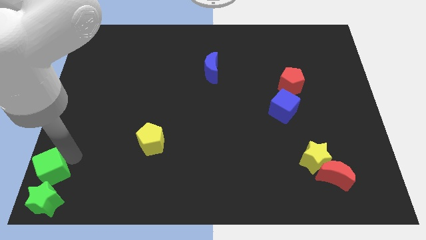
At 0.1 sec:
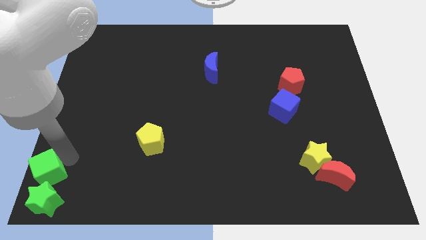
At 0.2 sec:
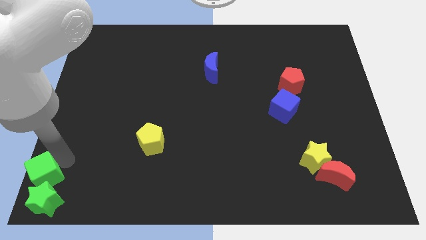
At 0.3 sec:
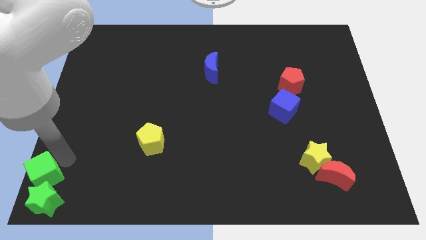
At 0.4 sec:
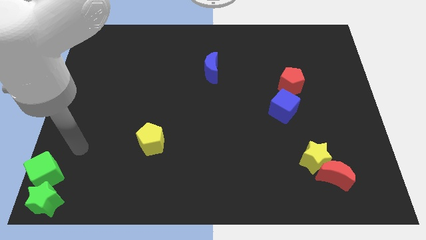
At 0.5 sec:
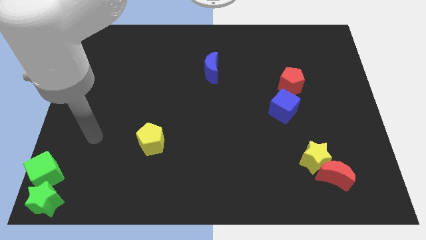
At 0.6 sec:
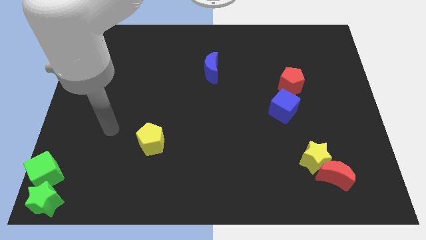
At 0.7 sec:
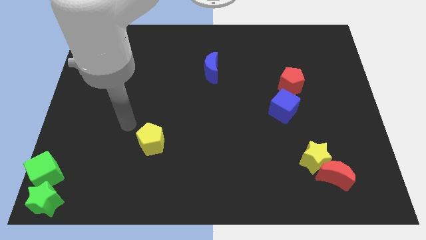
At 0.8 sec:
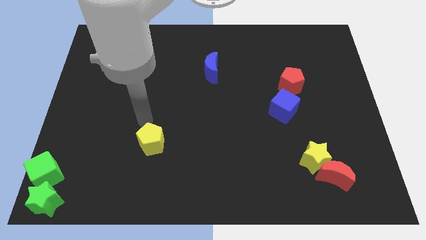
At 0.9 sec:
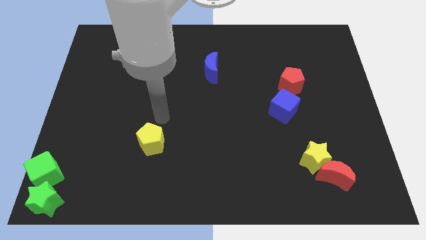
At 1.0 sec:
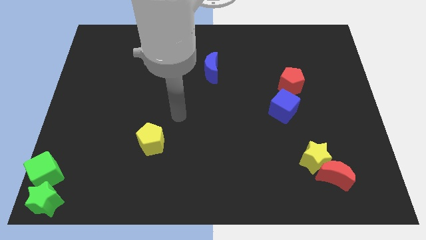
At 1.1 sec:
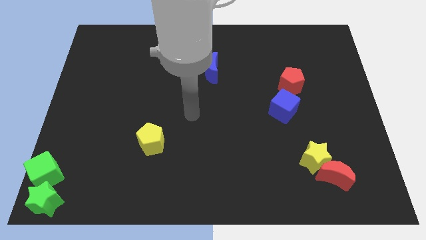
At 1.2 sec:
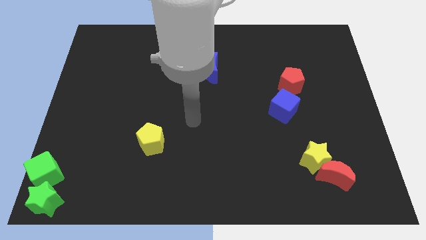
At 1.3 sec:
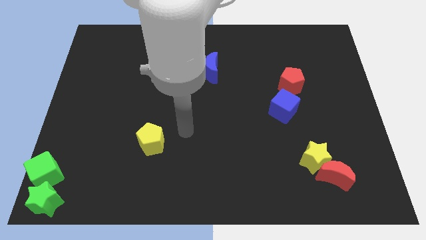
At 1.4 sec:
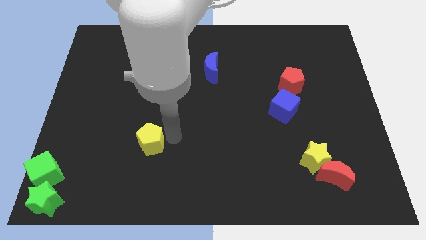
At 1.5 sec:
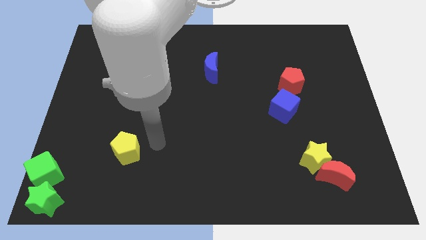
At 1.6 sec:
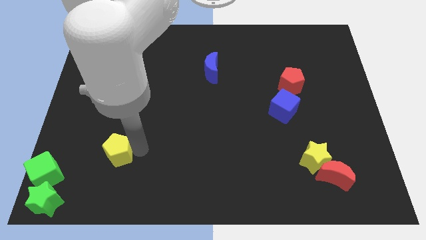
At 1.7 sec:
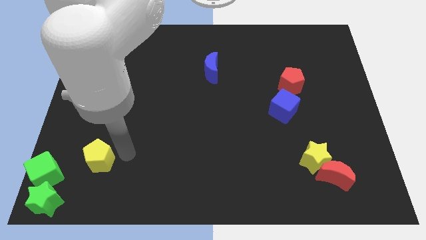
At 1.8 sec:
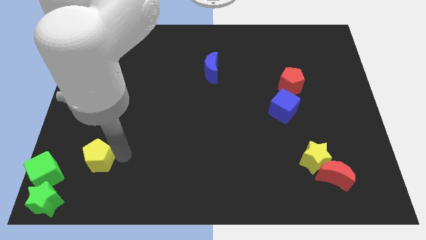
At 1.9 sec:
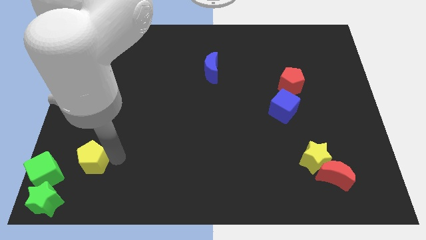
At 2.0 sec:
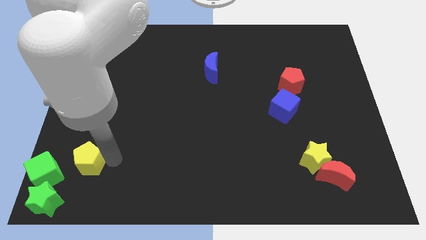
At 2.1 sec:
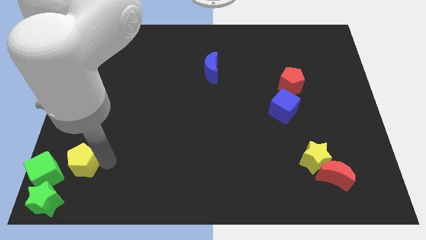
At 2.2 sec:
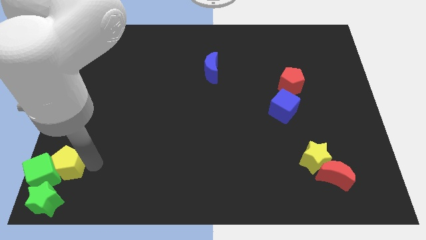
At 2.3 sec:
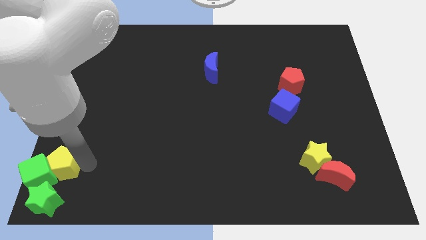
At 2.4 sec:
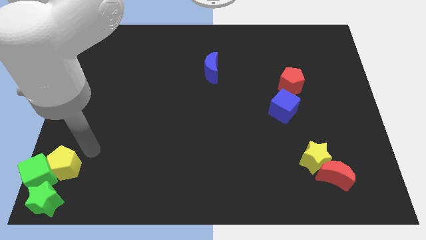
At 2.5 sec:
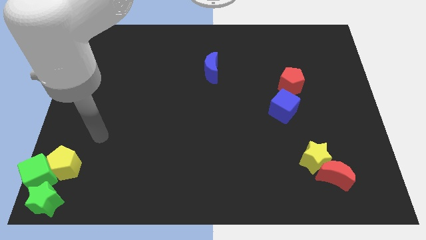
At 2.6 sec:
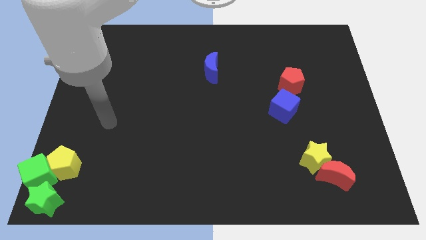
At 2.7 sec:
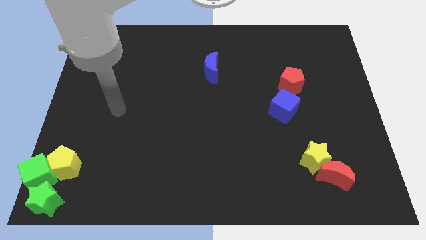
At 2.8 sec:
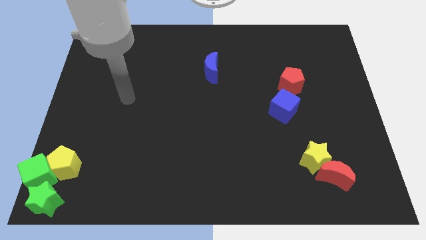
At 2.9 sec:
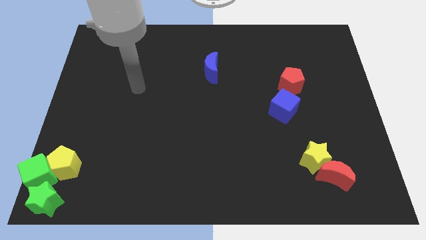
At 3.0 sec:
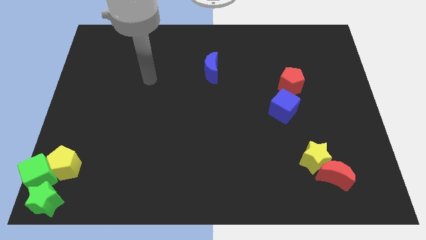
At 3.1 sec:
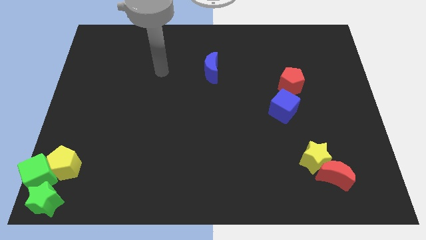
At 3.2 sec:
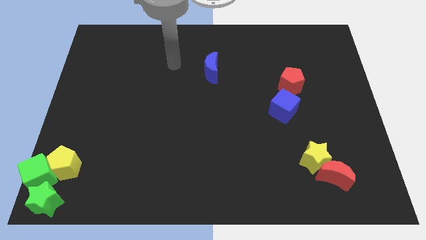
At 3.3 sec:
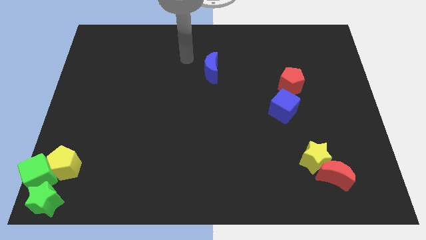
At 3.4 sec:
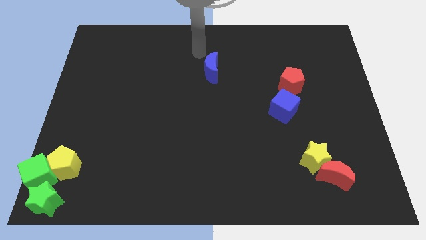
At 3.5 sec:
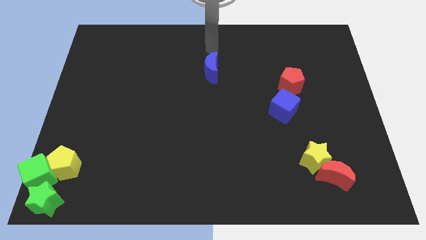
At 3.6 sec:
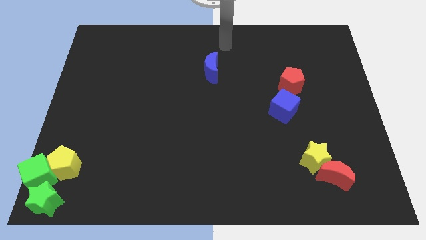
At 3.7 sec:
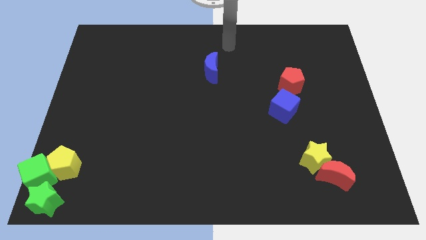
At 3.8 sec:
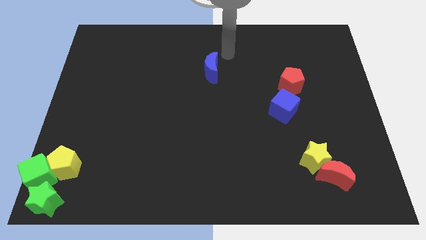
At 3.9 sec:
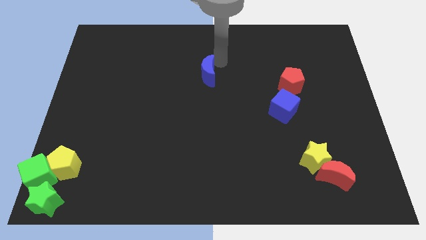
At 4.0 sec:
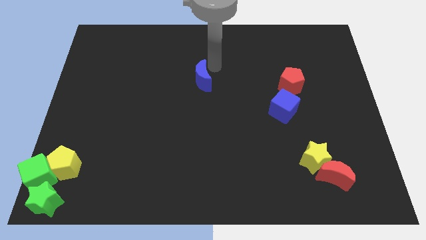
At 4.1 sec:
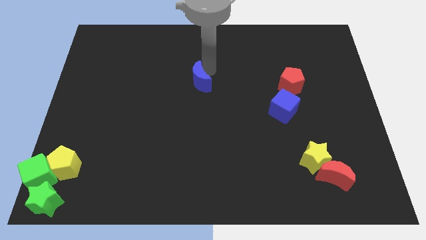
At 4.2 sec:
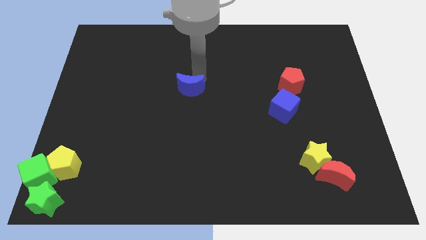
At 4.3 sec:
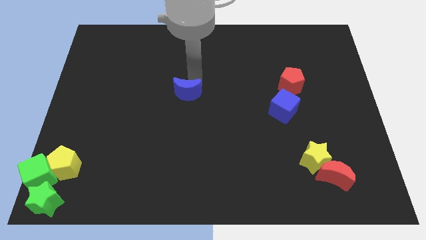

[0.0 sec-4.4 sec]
push the yellow pentagon towards the green cube

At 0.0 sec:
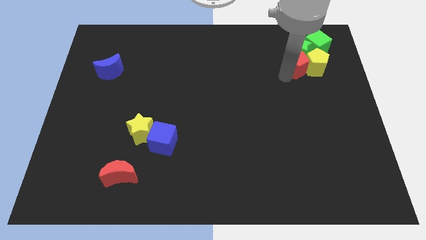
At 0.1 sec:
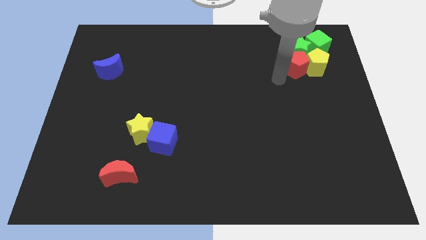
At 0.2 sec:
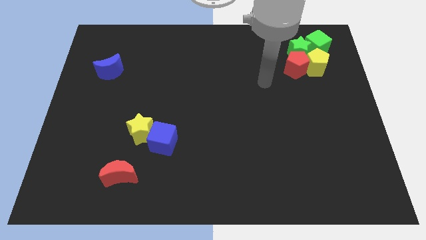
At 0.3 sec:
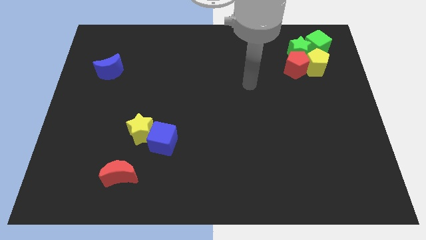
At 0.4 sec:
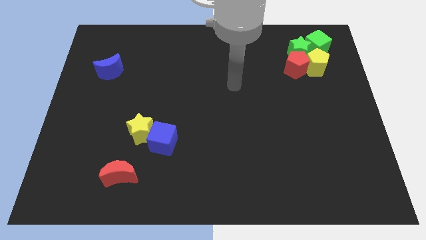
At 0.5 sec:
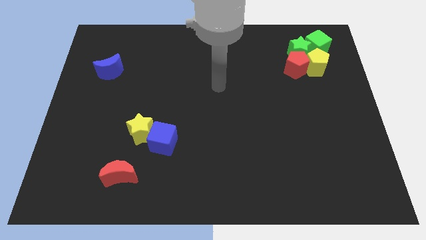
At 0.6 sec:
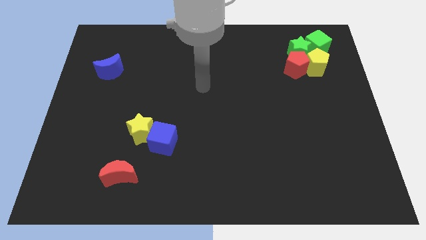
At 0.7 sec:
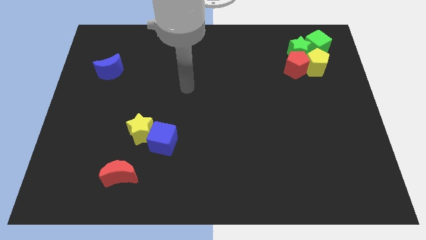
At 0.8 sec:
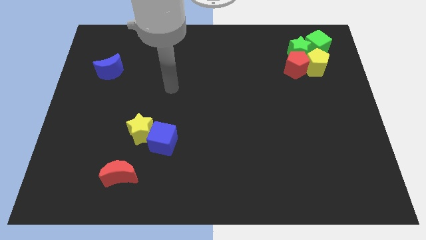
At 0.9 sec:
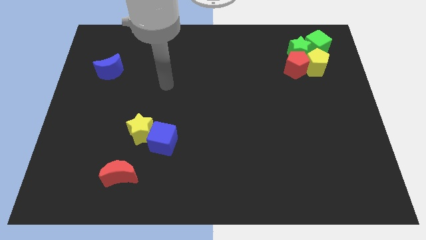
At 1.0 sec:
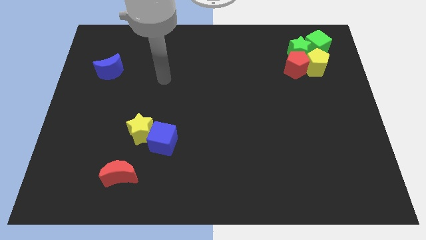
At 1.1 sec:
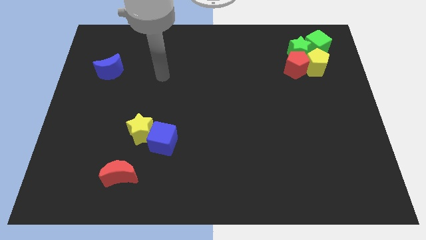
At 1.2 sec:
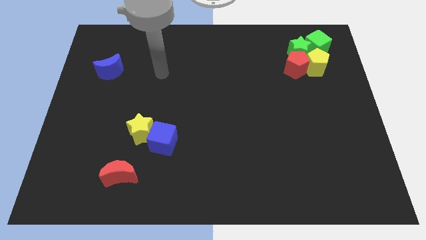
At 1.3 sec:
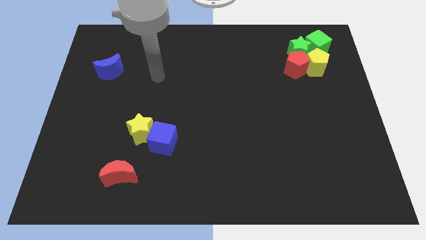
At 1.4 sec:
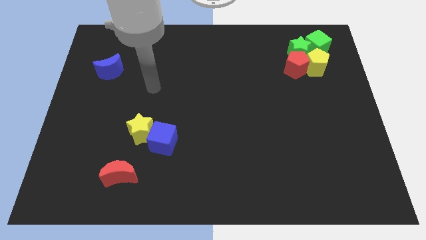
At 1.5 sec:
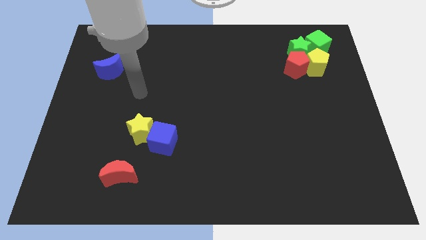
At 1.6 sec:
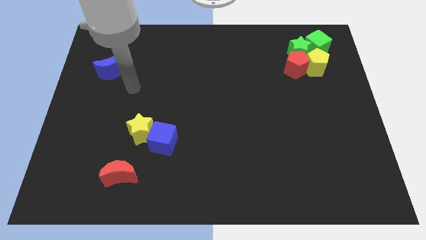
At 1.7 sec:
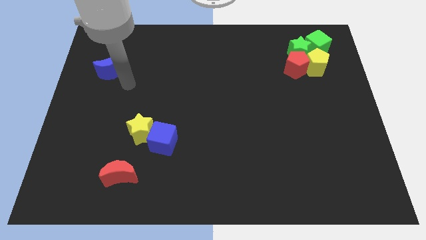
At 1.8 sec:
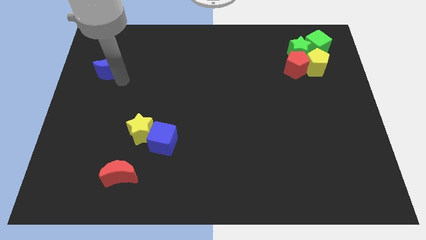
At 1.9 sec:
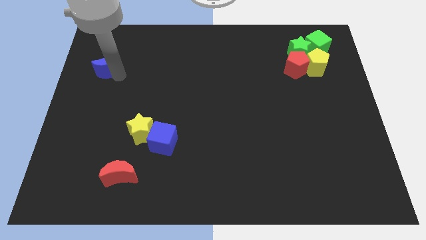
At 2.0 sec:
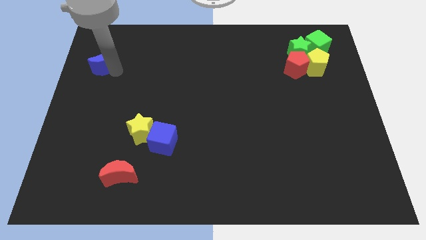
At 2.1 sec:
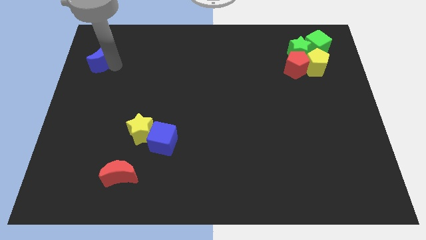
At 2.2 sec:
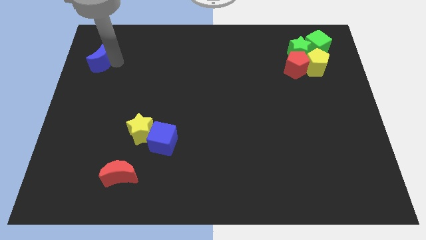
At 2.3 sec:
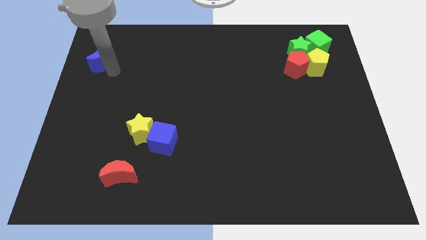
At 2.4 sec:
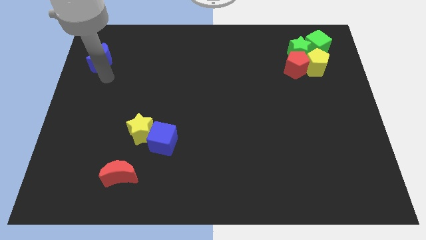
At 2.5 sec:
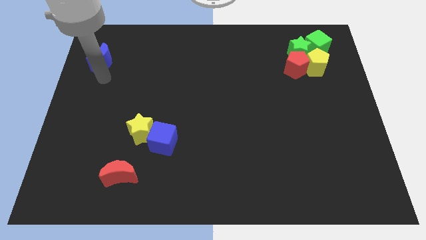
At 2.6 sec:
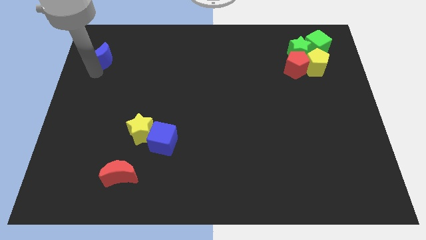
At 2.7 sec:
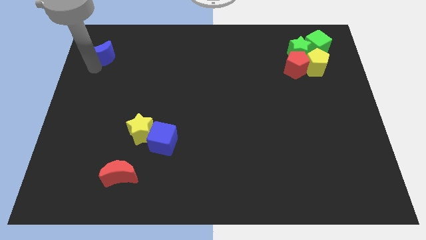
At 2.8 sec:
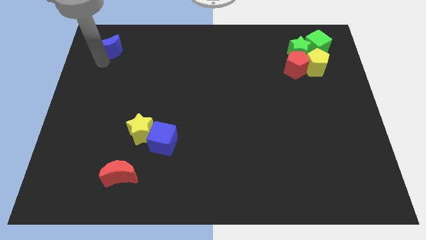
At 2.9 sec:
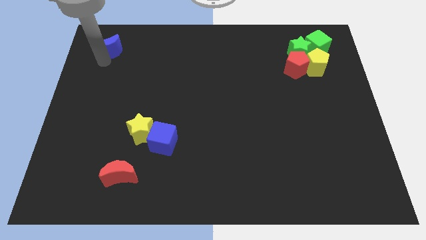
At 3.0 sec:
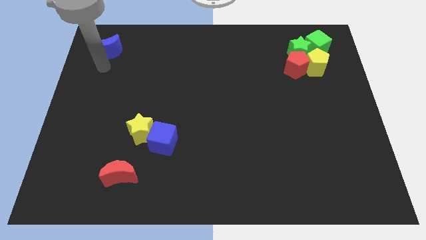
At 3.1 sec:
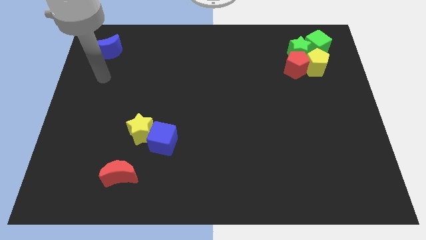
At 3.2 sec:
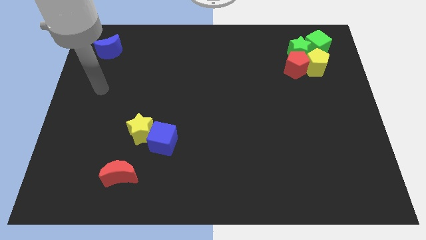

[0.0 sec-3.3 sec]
move the blue moon slightly to the top

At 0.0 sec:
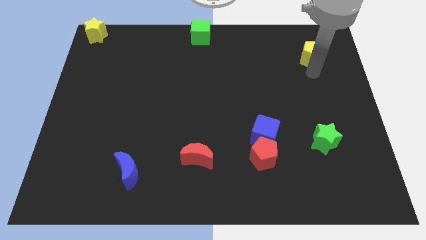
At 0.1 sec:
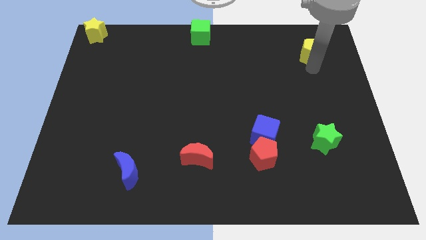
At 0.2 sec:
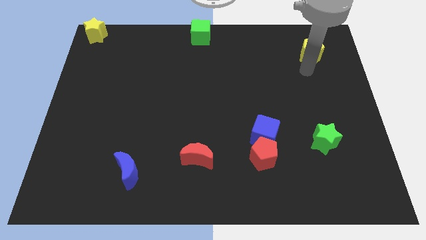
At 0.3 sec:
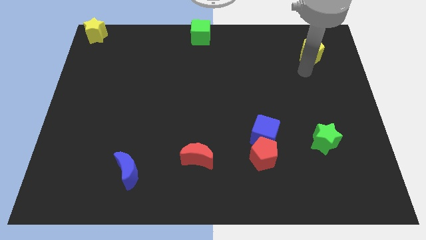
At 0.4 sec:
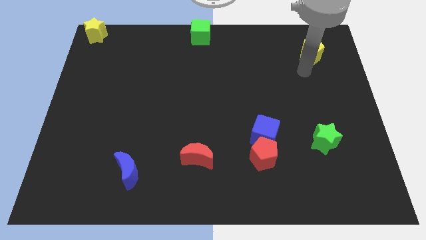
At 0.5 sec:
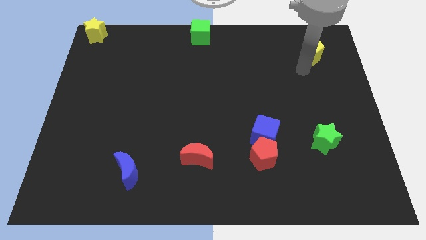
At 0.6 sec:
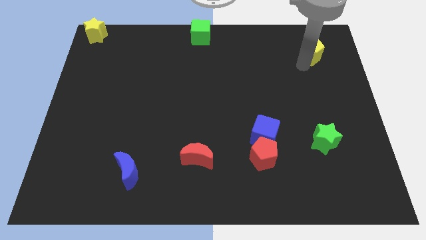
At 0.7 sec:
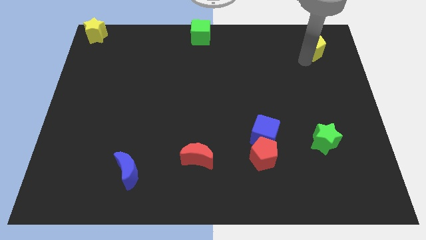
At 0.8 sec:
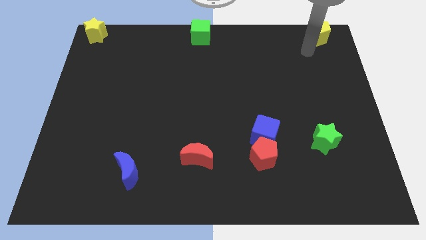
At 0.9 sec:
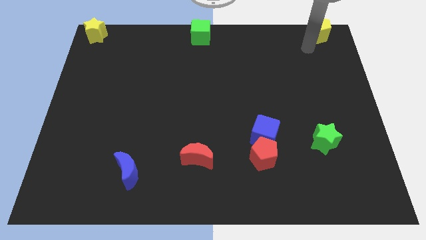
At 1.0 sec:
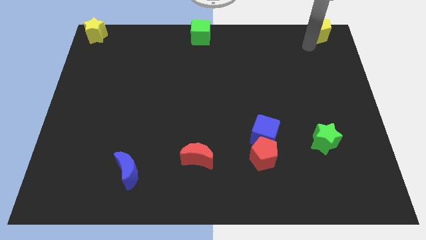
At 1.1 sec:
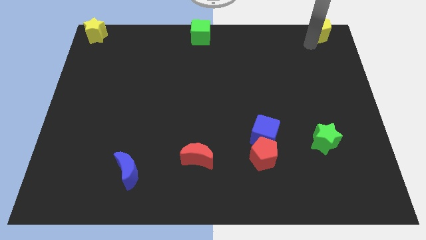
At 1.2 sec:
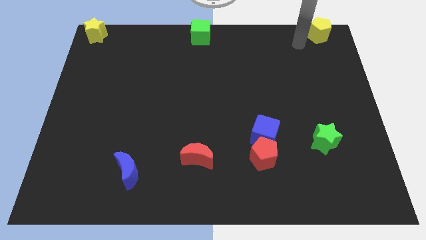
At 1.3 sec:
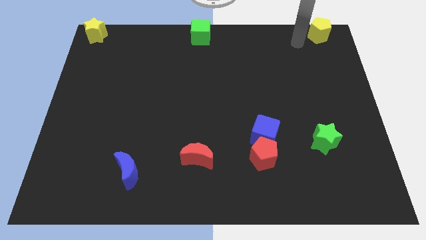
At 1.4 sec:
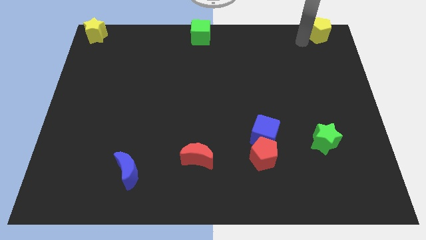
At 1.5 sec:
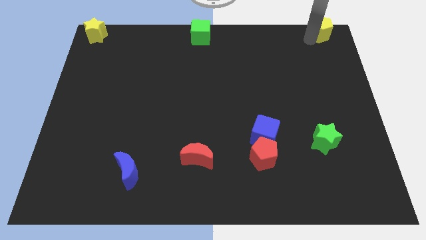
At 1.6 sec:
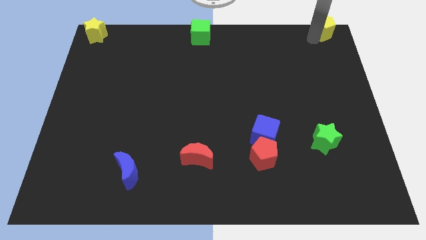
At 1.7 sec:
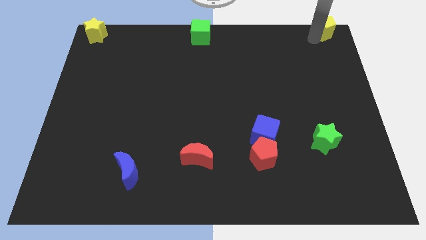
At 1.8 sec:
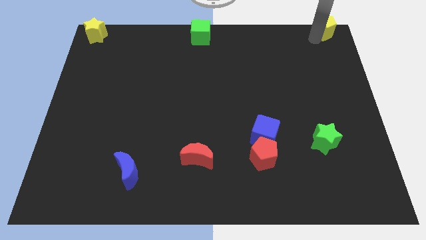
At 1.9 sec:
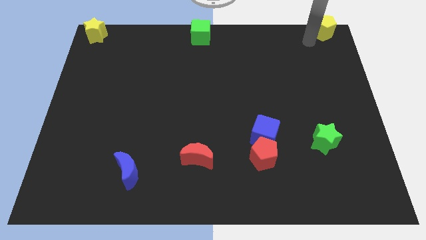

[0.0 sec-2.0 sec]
push the yellow pentagon to the top right corner of the board
